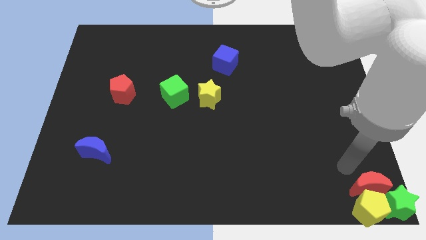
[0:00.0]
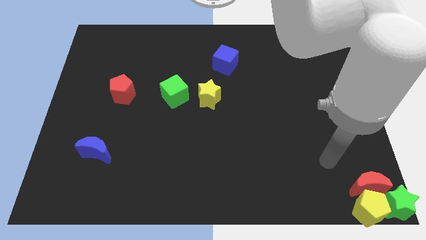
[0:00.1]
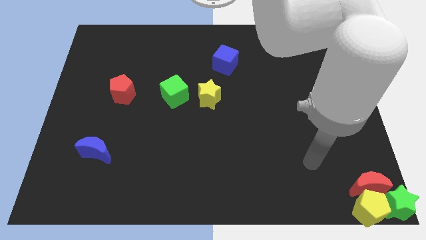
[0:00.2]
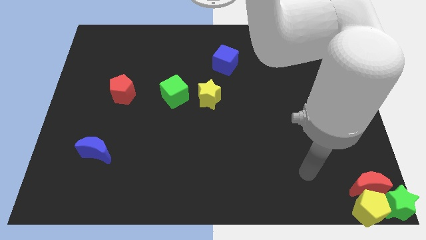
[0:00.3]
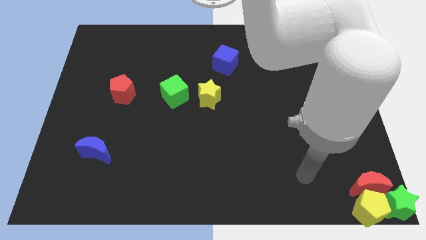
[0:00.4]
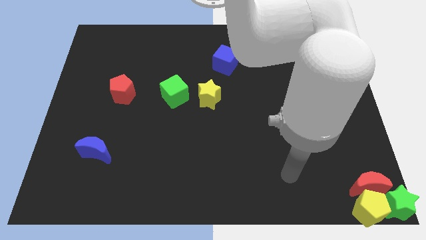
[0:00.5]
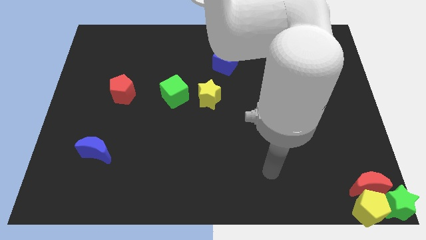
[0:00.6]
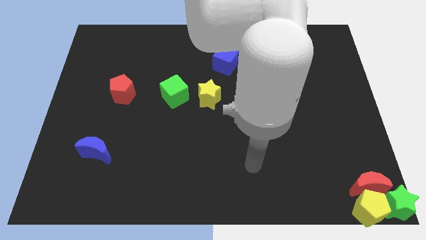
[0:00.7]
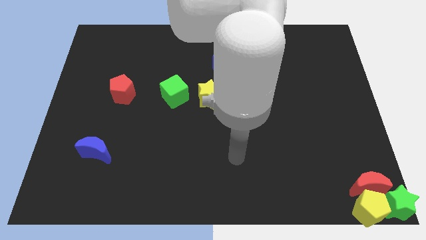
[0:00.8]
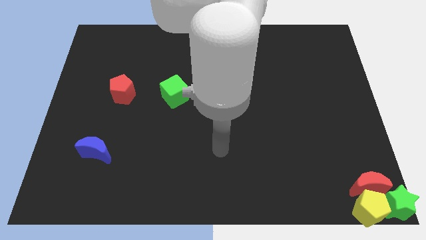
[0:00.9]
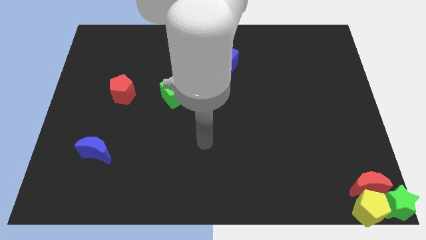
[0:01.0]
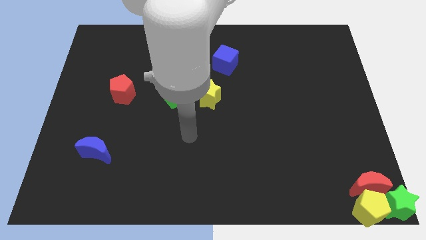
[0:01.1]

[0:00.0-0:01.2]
move your arm to the center of the board

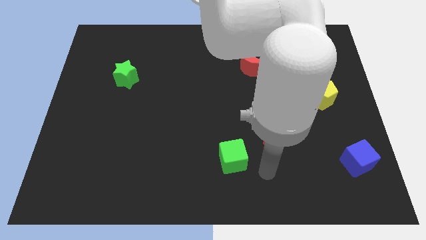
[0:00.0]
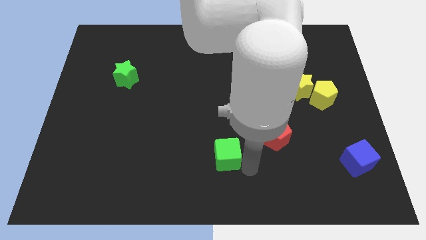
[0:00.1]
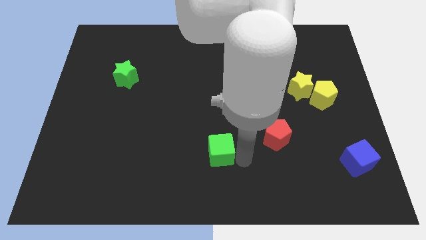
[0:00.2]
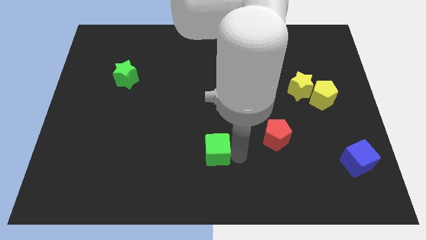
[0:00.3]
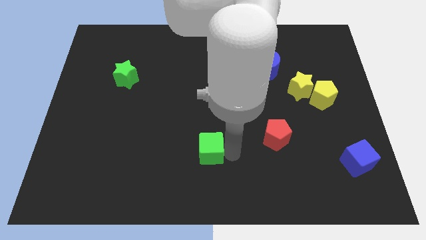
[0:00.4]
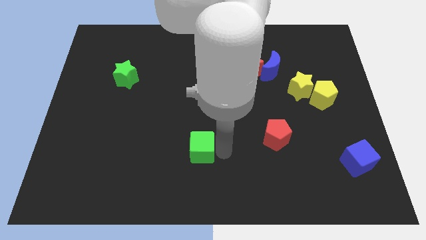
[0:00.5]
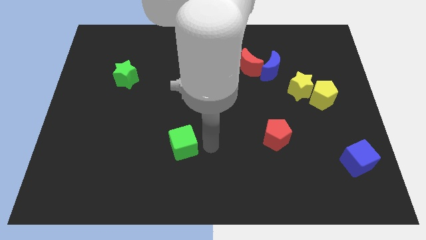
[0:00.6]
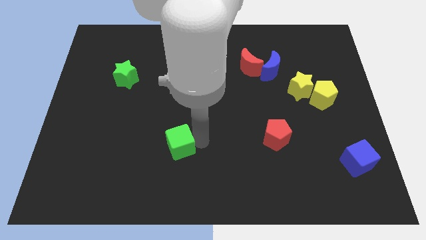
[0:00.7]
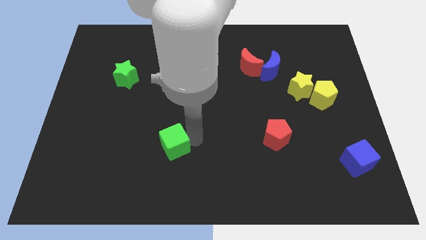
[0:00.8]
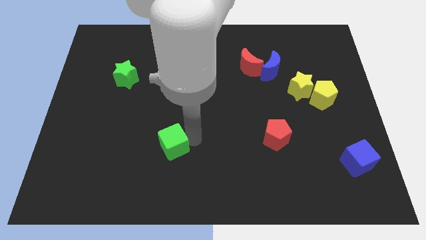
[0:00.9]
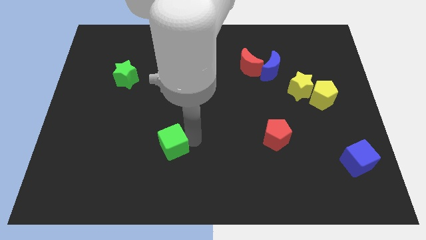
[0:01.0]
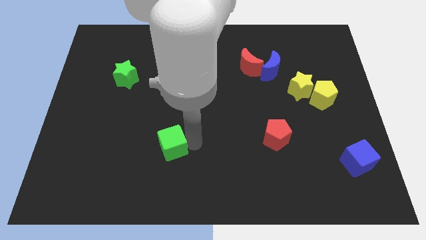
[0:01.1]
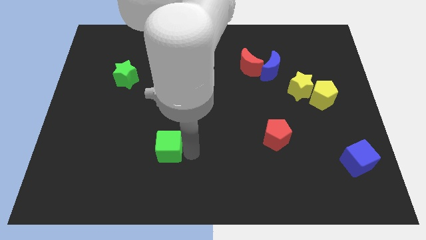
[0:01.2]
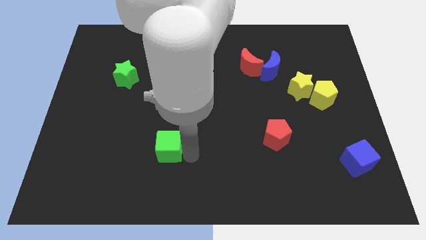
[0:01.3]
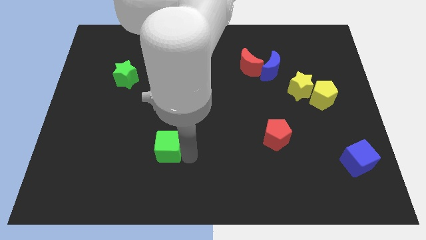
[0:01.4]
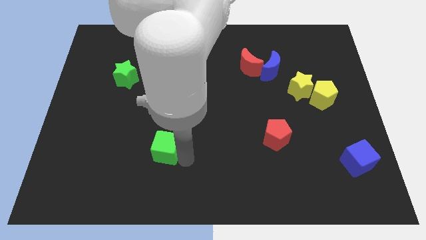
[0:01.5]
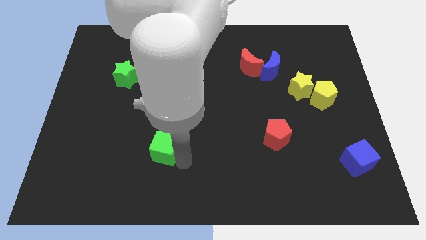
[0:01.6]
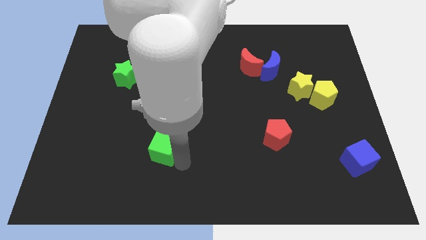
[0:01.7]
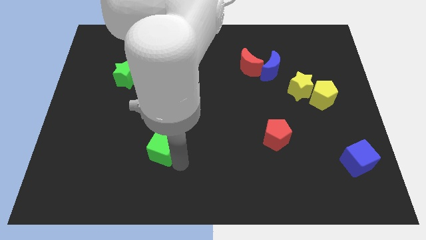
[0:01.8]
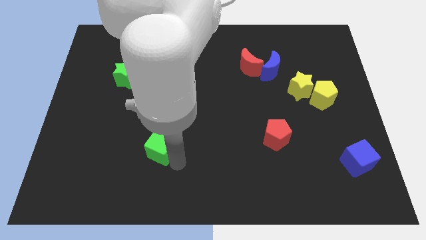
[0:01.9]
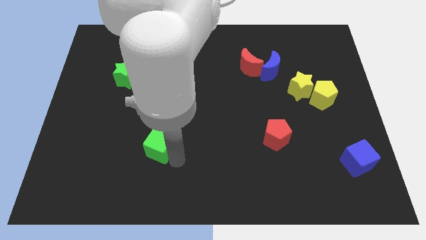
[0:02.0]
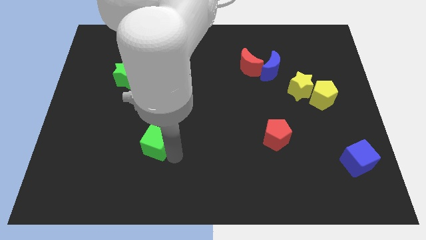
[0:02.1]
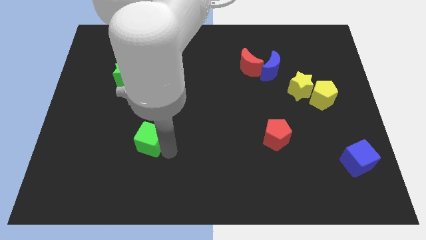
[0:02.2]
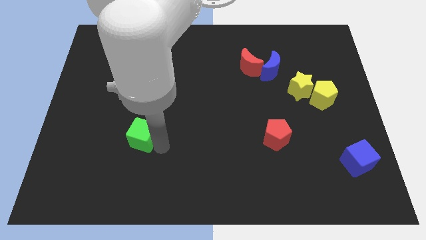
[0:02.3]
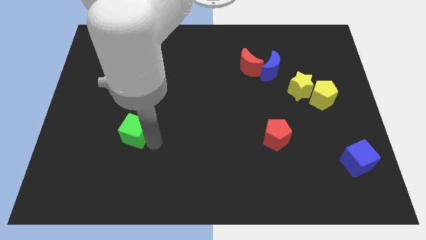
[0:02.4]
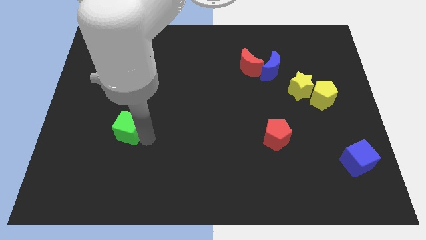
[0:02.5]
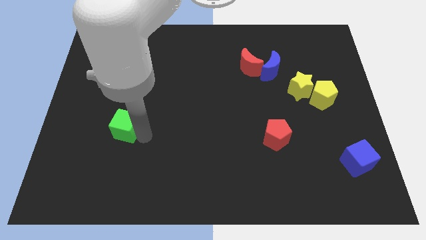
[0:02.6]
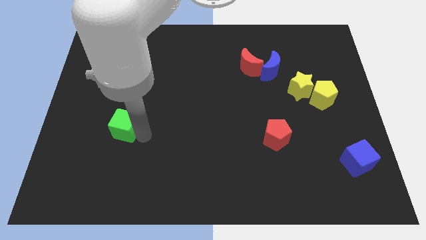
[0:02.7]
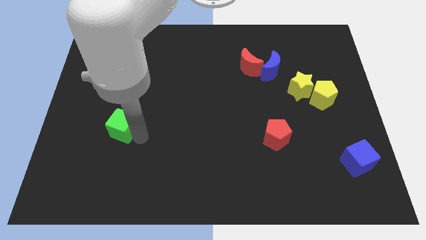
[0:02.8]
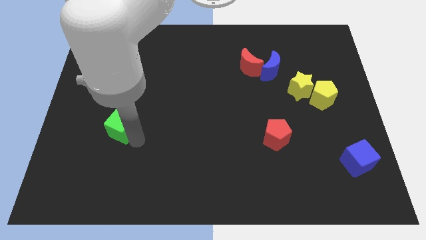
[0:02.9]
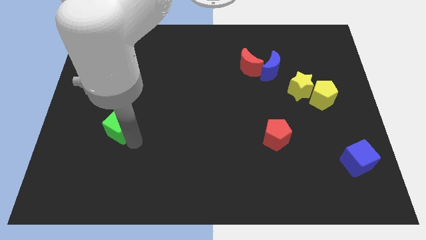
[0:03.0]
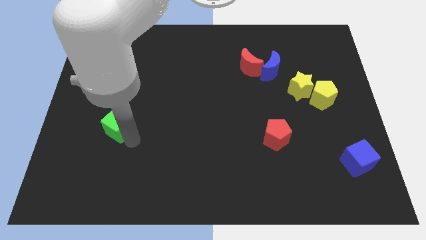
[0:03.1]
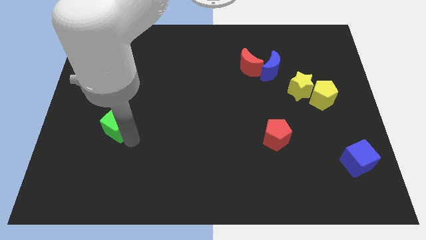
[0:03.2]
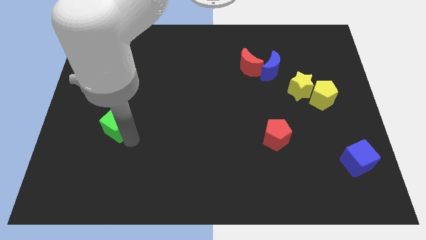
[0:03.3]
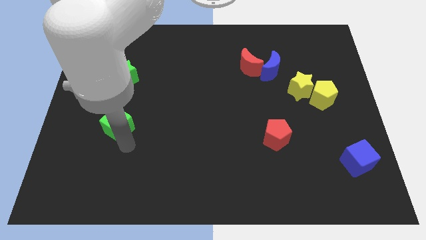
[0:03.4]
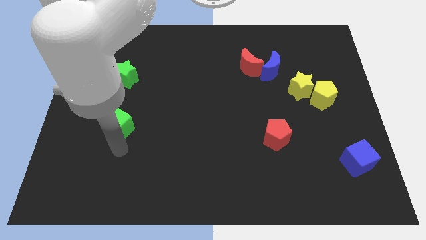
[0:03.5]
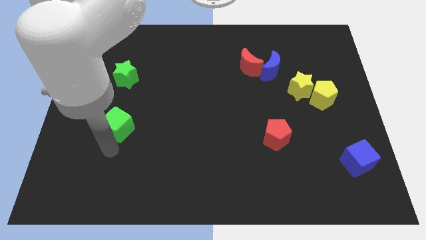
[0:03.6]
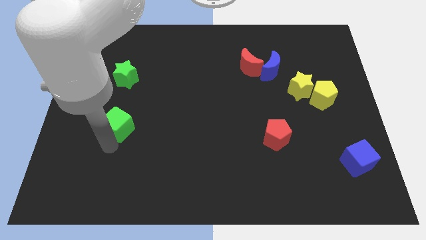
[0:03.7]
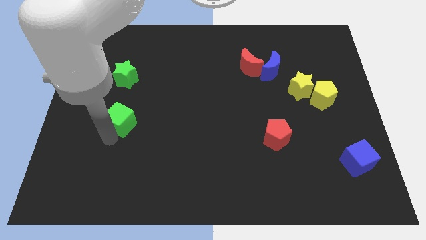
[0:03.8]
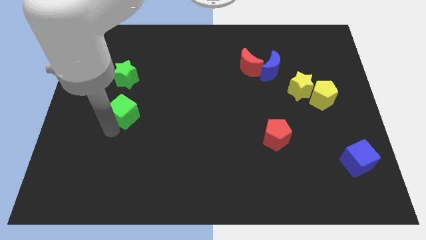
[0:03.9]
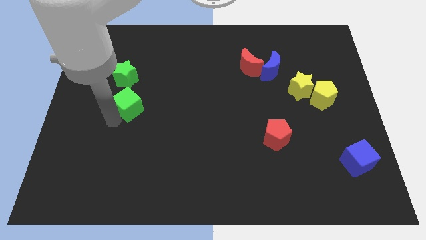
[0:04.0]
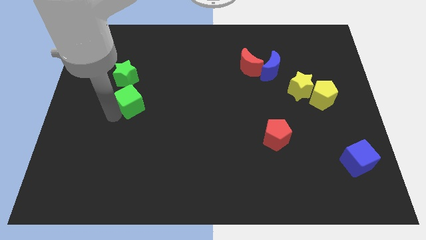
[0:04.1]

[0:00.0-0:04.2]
move the green cube below the green star

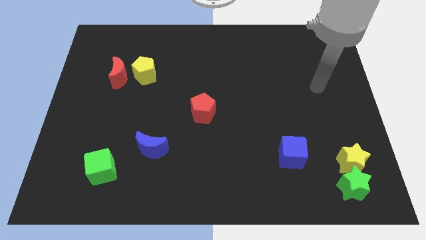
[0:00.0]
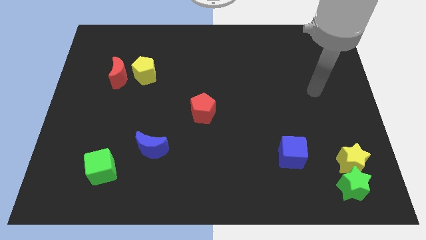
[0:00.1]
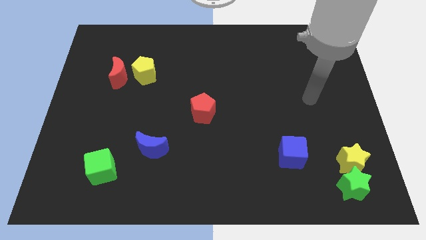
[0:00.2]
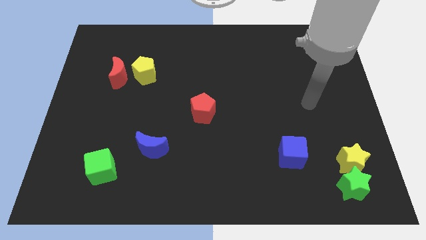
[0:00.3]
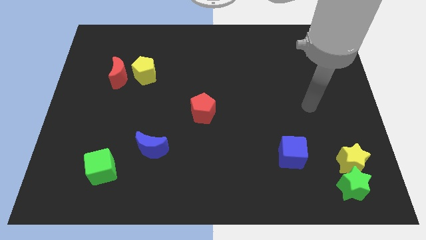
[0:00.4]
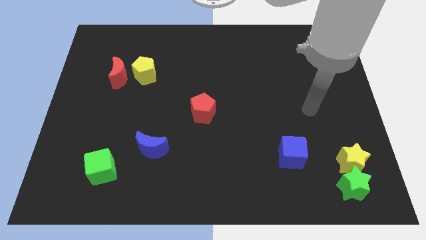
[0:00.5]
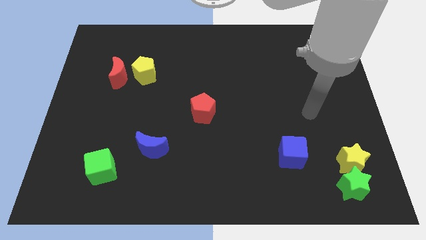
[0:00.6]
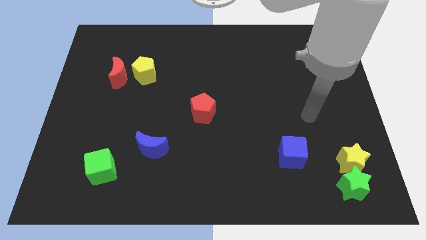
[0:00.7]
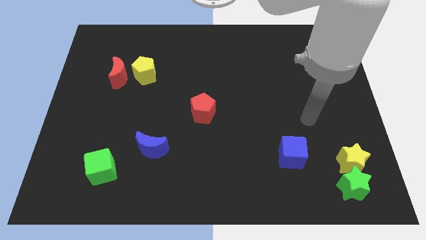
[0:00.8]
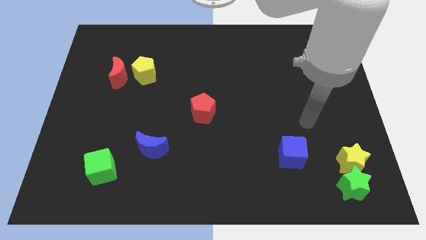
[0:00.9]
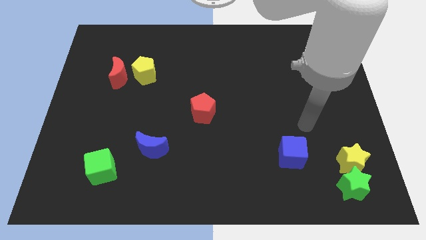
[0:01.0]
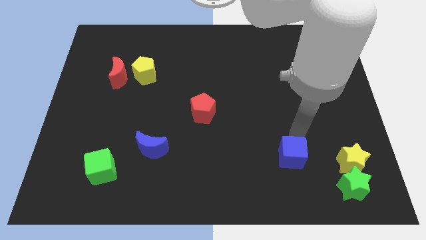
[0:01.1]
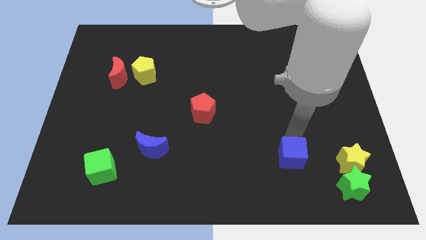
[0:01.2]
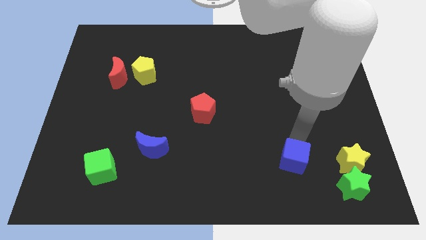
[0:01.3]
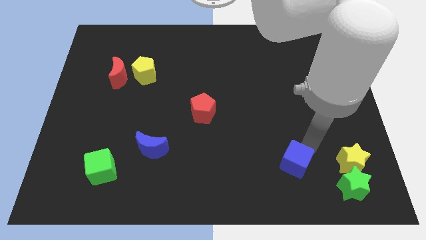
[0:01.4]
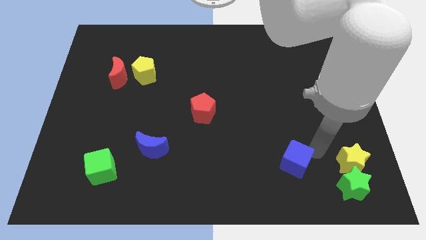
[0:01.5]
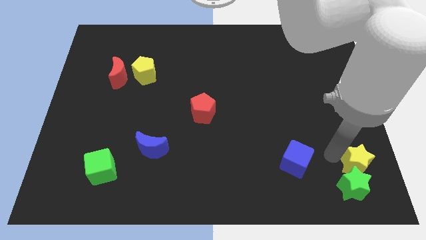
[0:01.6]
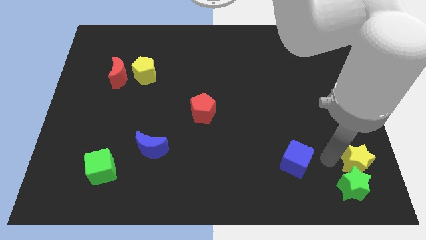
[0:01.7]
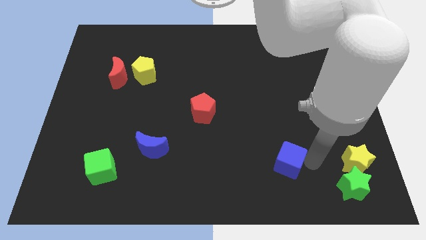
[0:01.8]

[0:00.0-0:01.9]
slide the blue cube towards the blue moon

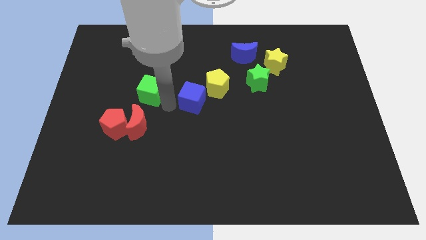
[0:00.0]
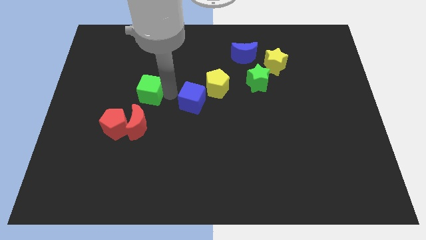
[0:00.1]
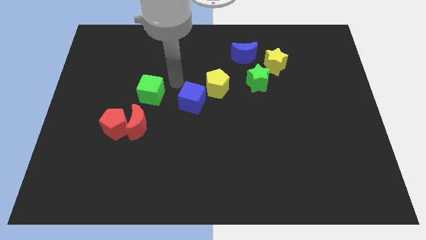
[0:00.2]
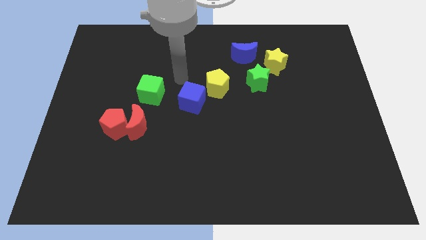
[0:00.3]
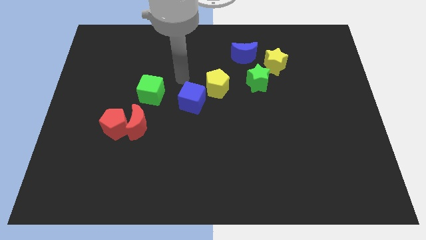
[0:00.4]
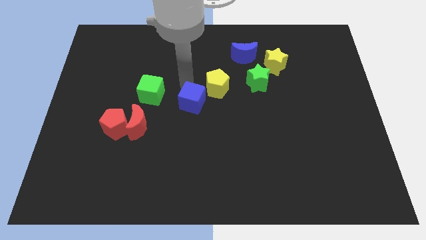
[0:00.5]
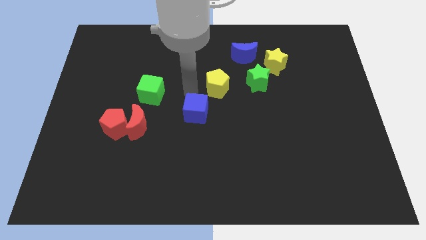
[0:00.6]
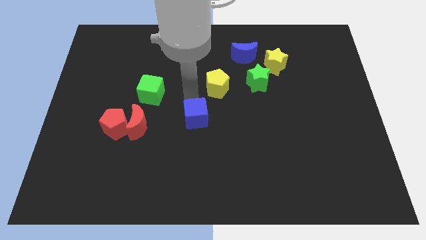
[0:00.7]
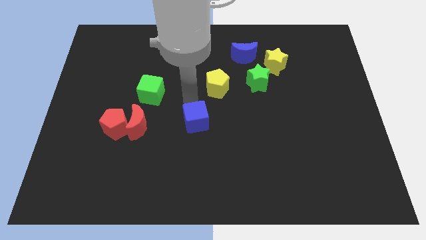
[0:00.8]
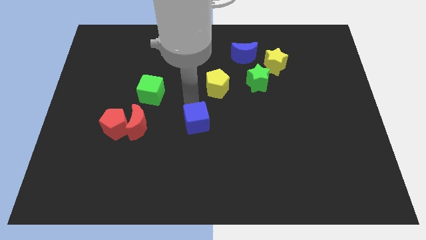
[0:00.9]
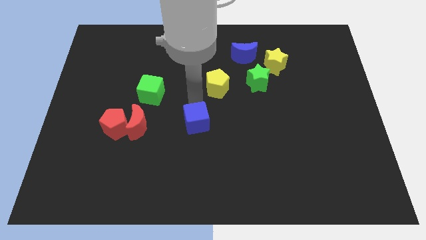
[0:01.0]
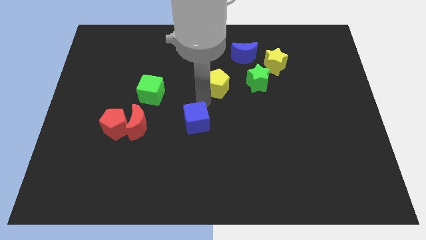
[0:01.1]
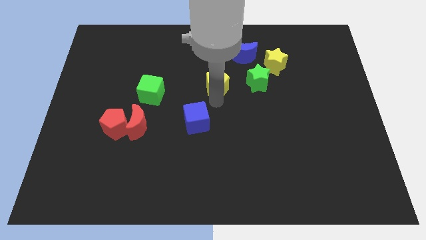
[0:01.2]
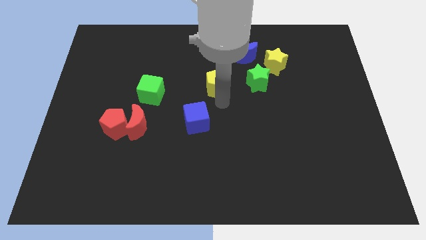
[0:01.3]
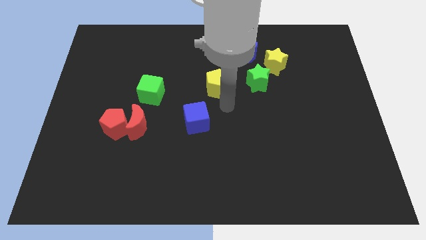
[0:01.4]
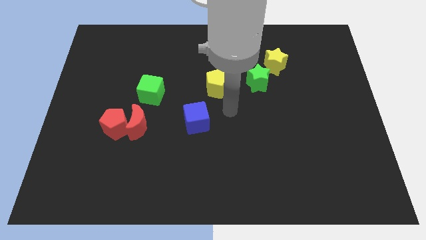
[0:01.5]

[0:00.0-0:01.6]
place blue cube to the center of the board

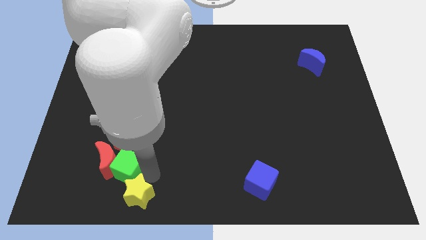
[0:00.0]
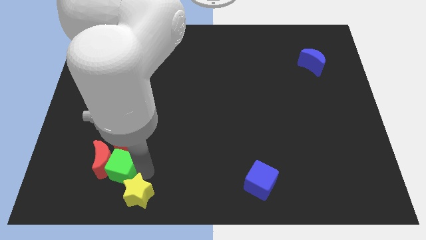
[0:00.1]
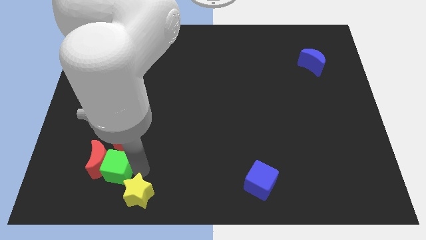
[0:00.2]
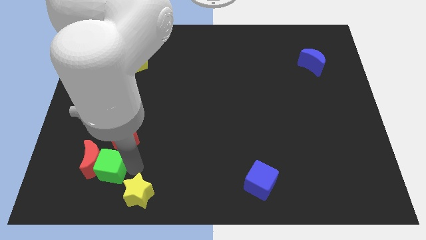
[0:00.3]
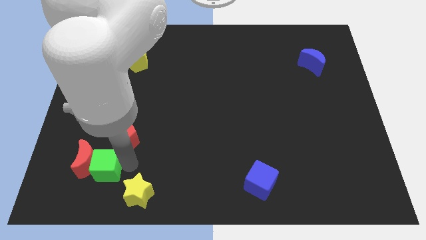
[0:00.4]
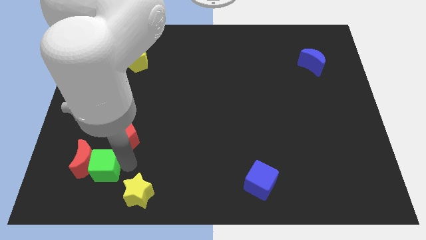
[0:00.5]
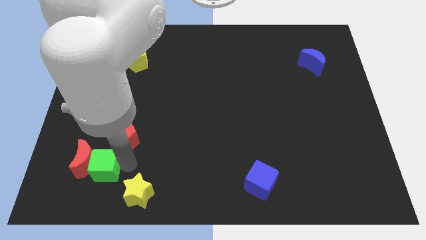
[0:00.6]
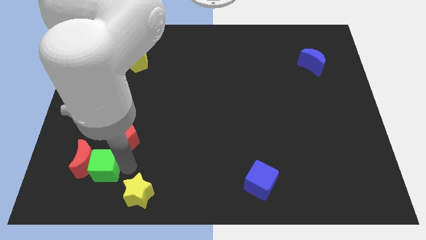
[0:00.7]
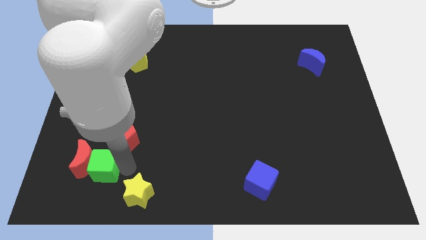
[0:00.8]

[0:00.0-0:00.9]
move the green cube and red moon to the left
